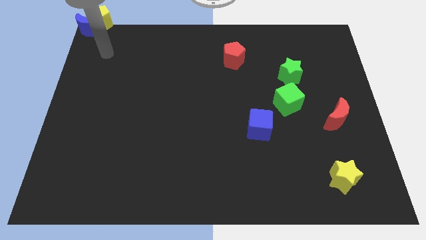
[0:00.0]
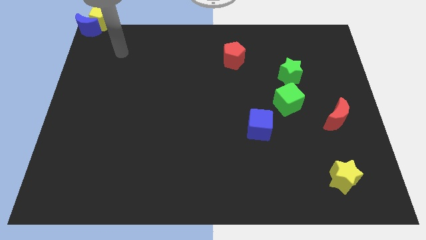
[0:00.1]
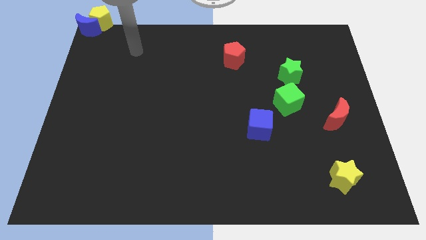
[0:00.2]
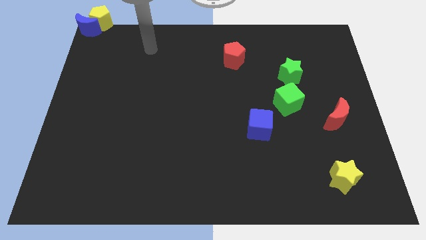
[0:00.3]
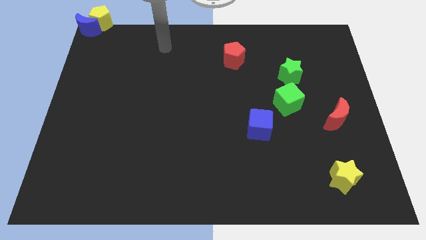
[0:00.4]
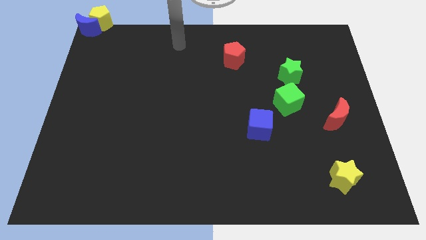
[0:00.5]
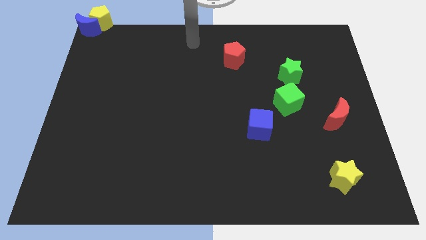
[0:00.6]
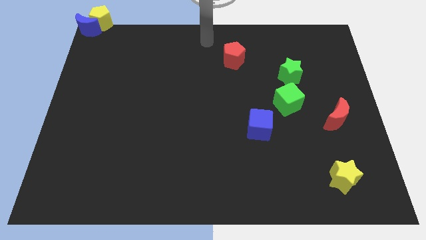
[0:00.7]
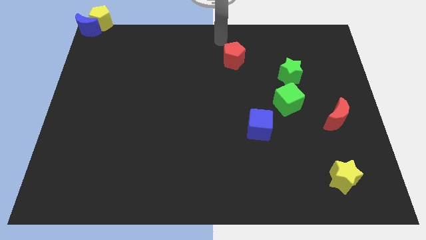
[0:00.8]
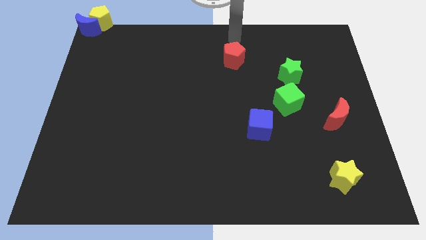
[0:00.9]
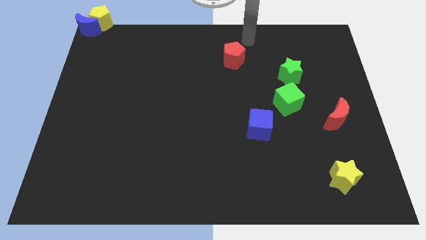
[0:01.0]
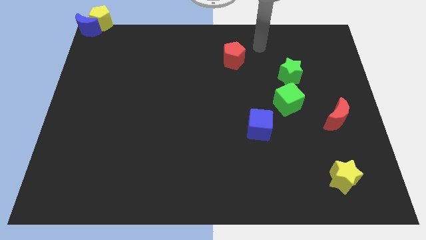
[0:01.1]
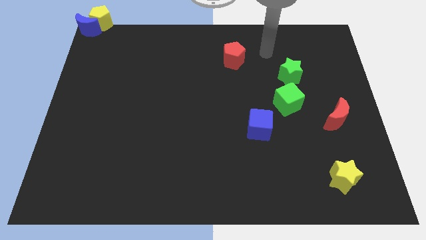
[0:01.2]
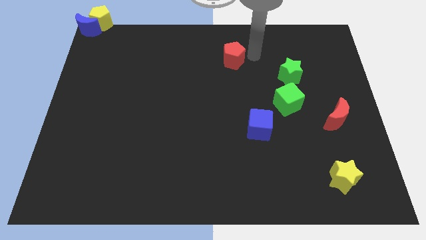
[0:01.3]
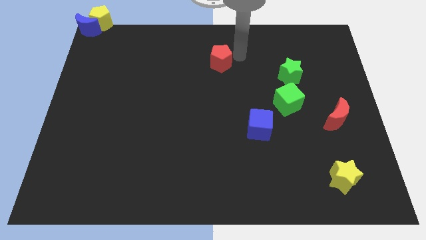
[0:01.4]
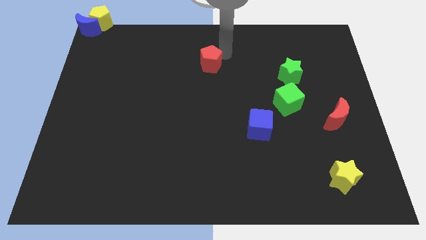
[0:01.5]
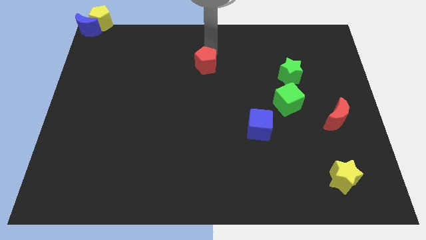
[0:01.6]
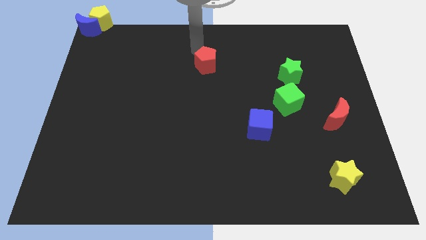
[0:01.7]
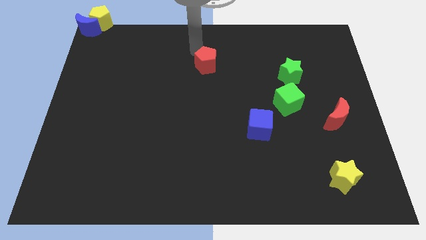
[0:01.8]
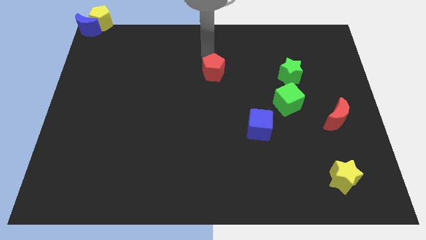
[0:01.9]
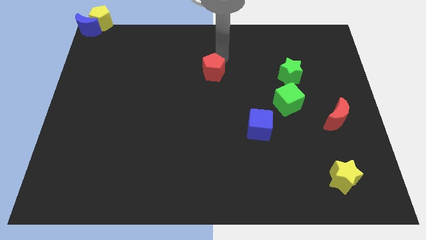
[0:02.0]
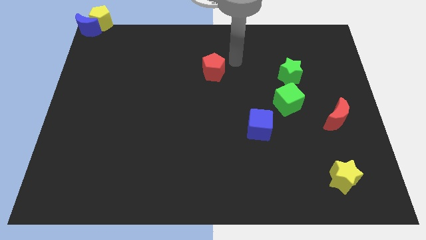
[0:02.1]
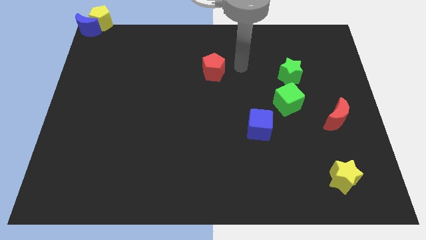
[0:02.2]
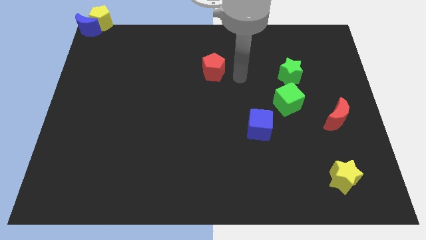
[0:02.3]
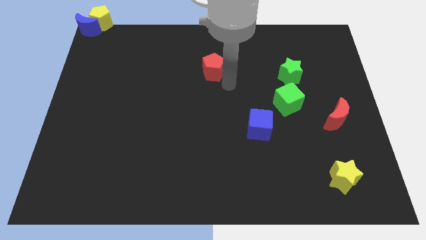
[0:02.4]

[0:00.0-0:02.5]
slightly move the red pentagon to the left side

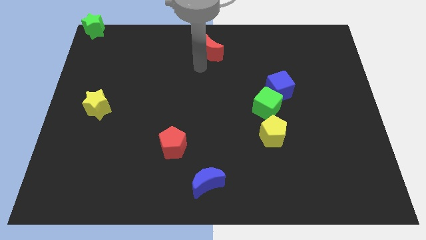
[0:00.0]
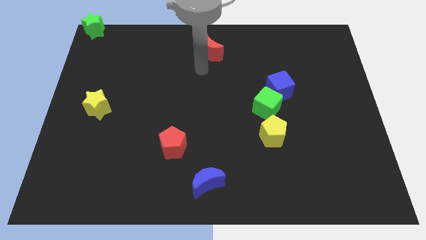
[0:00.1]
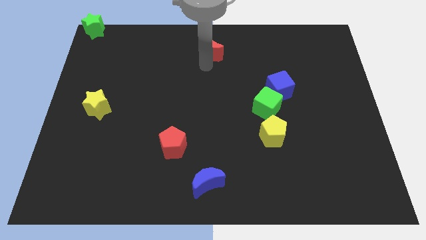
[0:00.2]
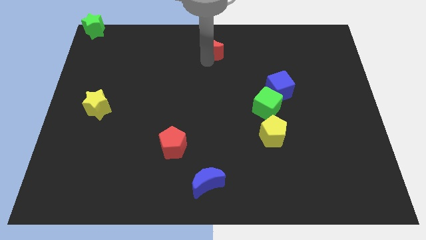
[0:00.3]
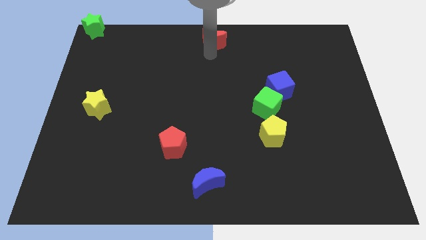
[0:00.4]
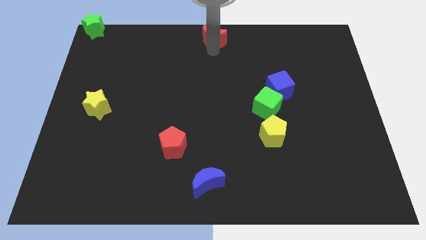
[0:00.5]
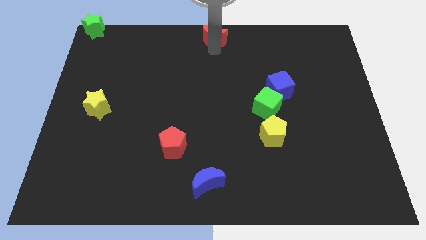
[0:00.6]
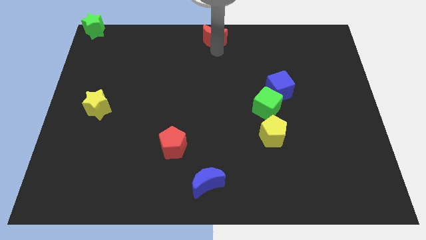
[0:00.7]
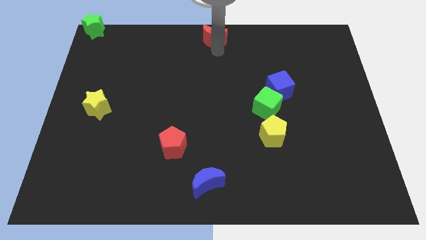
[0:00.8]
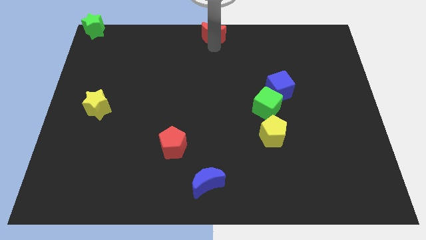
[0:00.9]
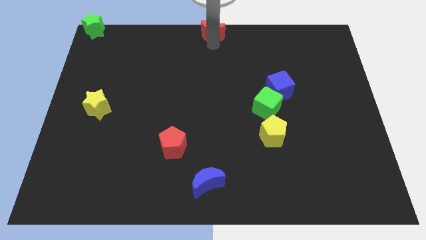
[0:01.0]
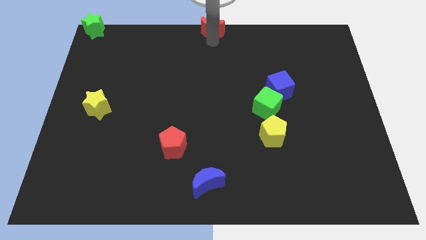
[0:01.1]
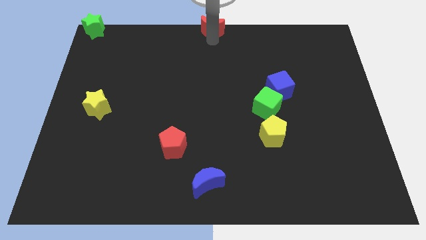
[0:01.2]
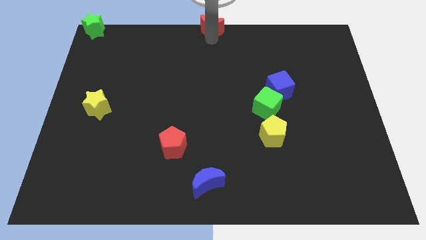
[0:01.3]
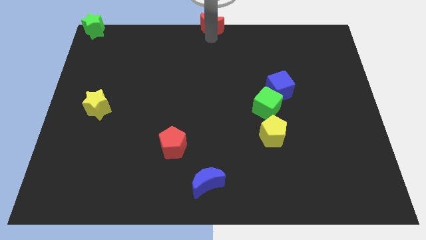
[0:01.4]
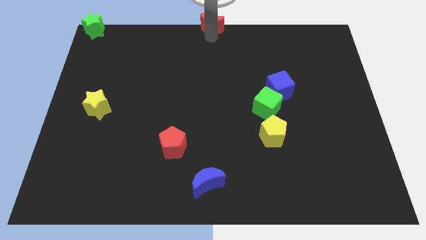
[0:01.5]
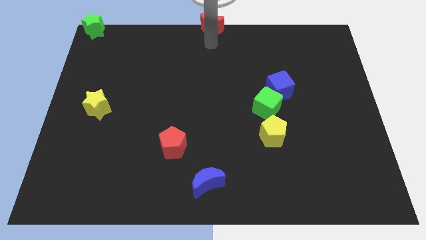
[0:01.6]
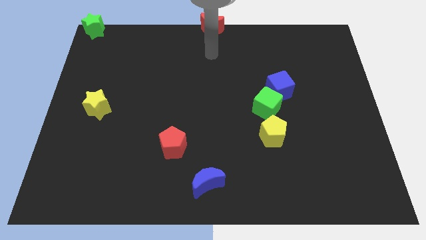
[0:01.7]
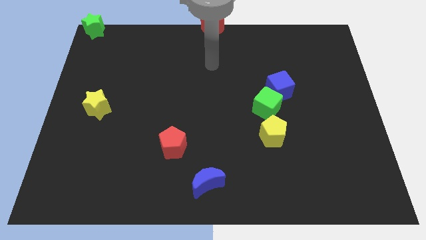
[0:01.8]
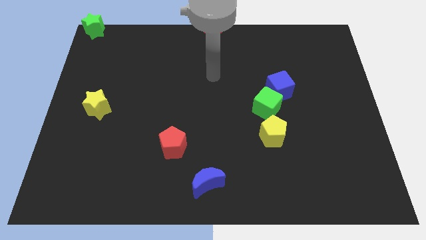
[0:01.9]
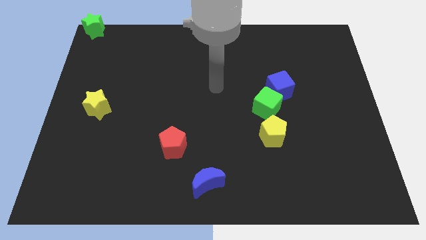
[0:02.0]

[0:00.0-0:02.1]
drag red crescent to the top center of the board

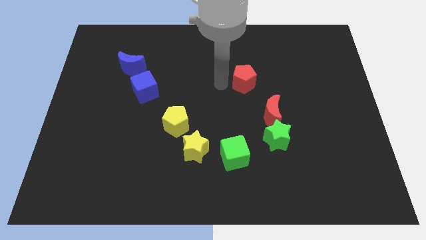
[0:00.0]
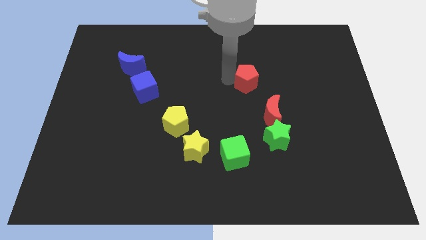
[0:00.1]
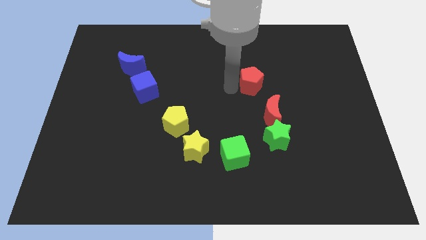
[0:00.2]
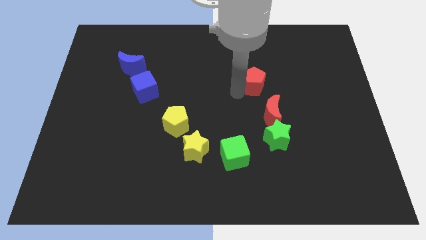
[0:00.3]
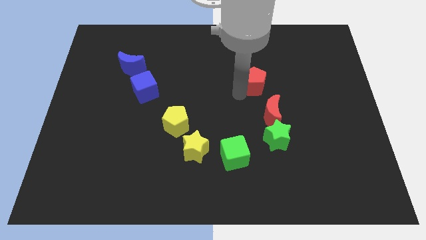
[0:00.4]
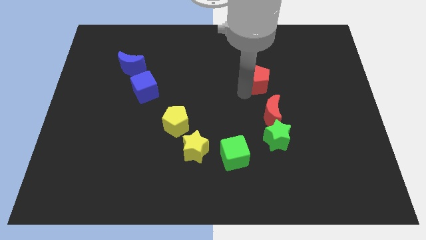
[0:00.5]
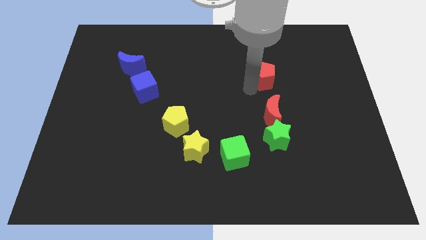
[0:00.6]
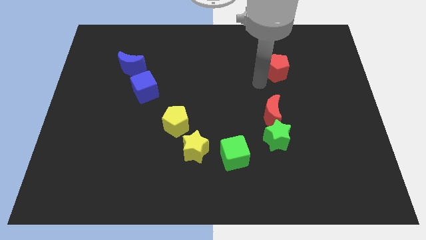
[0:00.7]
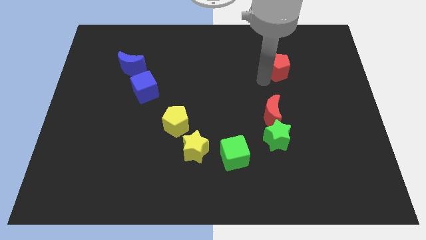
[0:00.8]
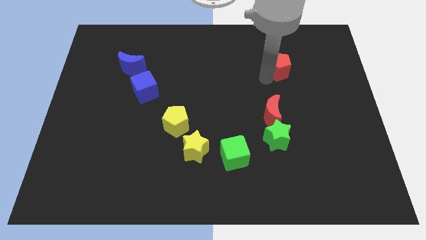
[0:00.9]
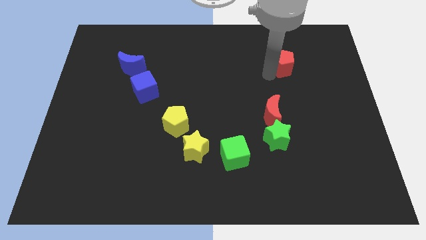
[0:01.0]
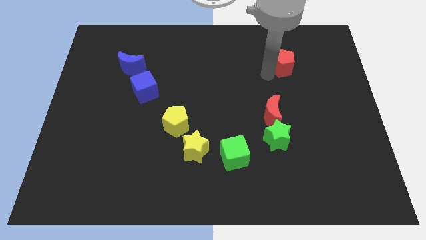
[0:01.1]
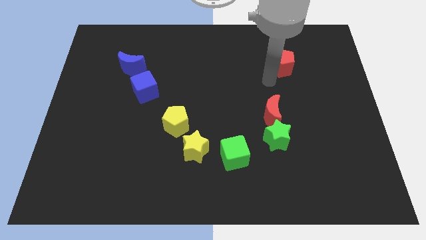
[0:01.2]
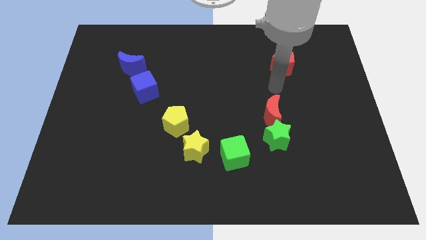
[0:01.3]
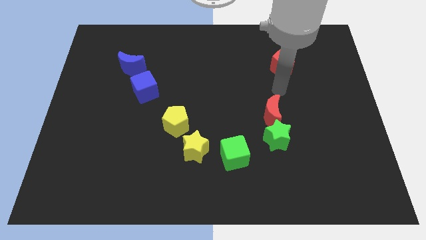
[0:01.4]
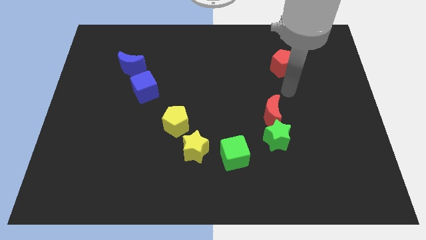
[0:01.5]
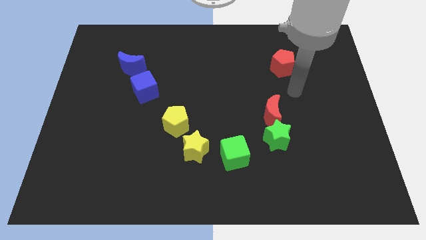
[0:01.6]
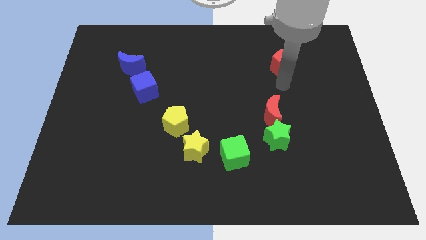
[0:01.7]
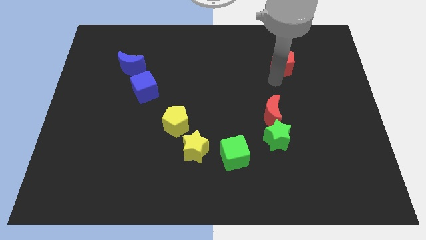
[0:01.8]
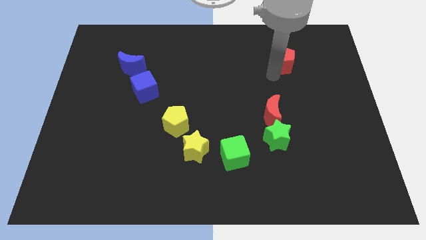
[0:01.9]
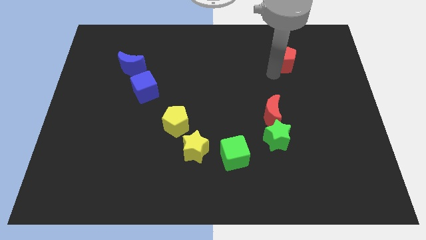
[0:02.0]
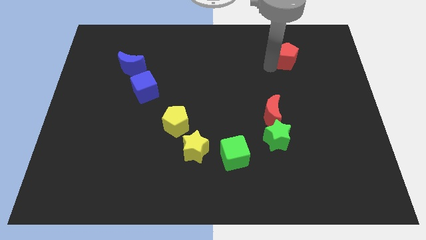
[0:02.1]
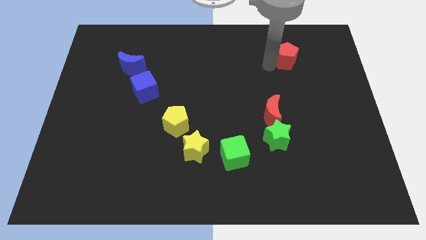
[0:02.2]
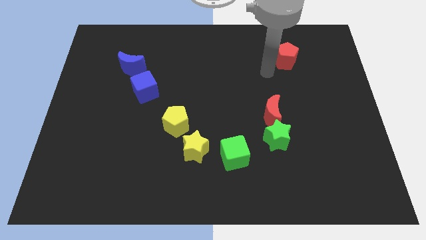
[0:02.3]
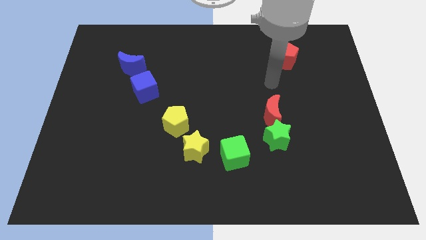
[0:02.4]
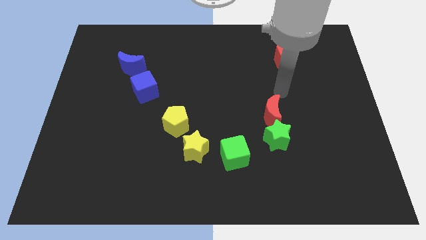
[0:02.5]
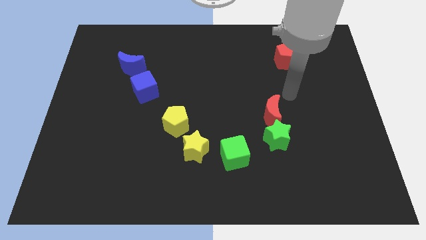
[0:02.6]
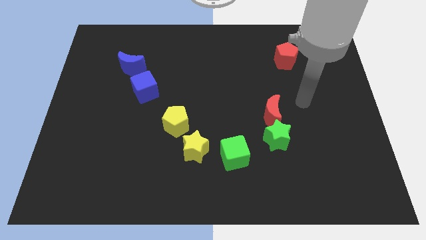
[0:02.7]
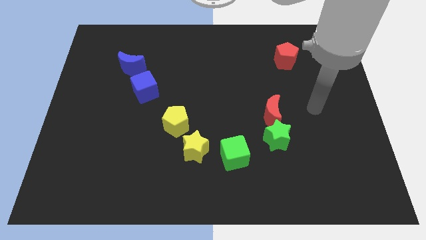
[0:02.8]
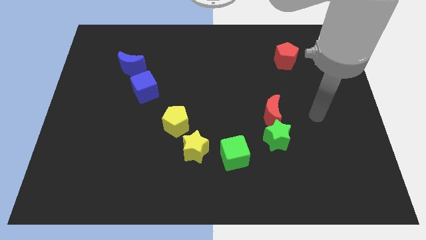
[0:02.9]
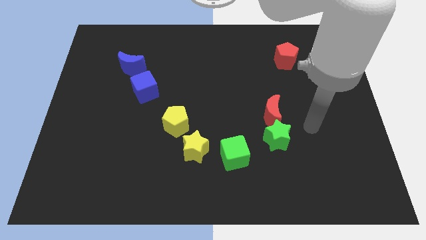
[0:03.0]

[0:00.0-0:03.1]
slide red pentagon towards top right

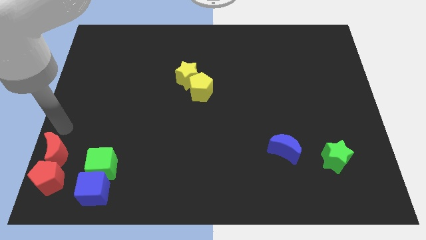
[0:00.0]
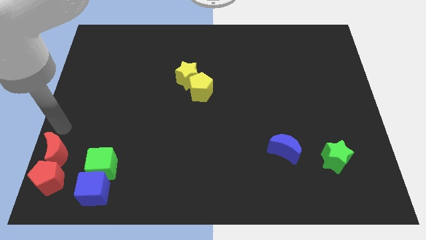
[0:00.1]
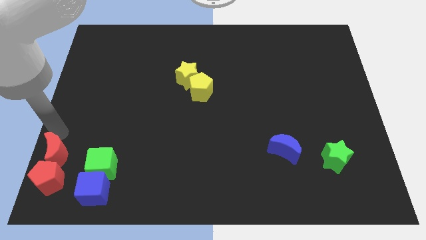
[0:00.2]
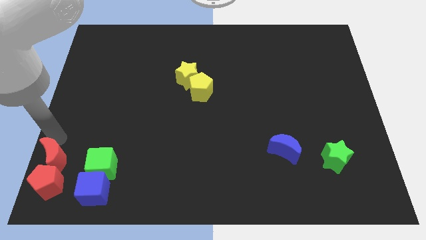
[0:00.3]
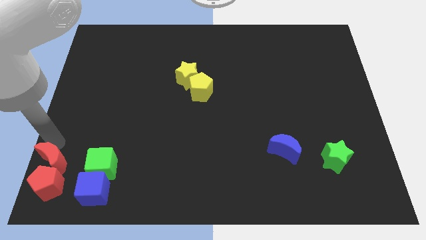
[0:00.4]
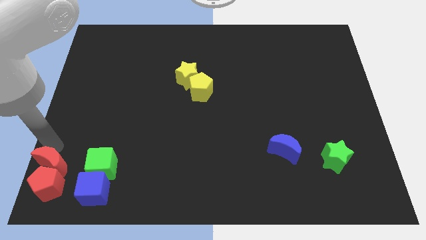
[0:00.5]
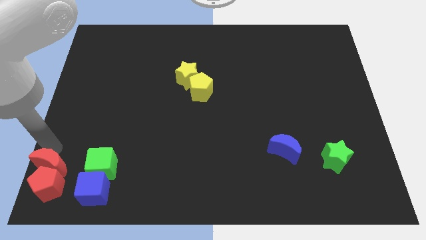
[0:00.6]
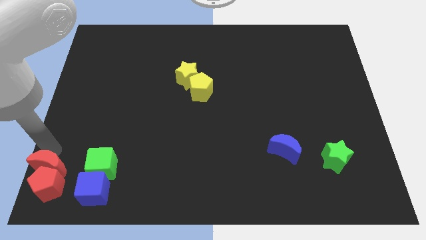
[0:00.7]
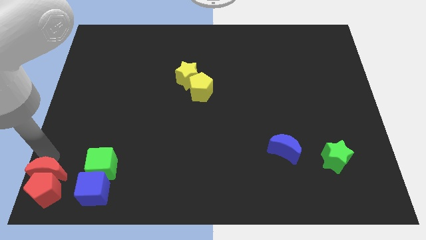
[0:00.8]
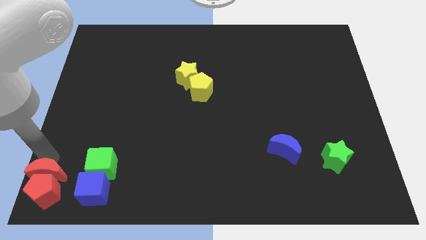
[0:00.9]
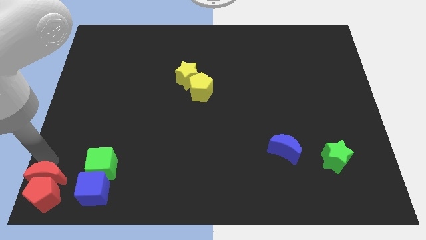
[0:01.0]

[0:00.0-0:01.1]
move red blocks to the bottom left
